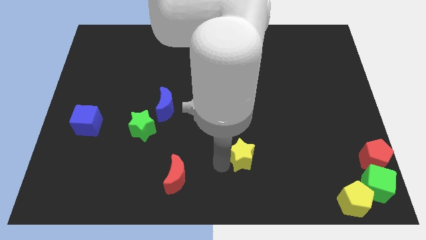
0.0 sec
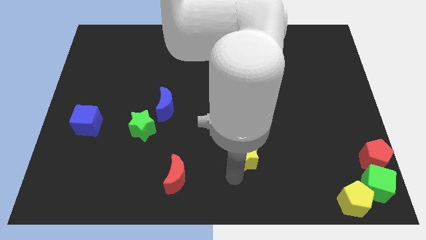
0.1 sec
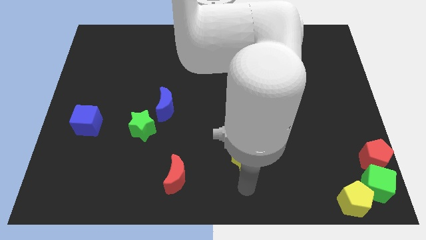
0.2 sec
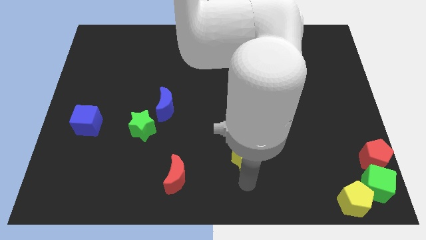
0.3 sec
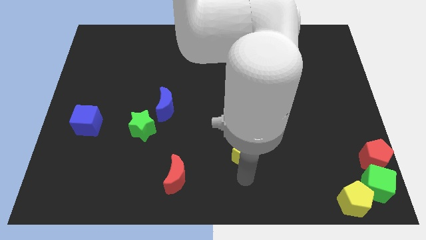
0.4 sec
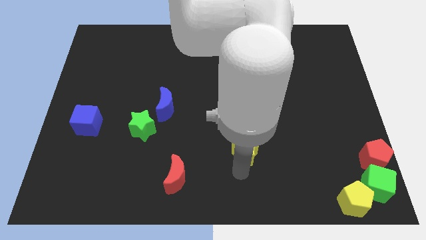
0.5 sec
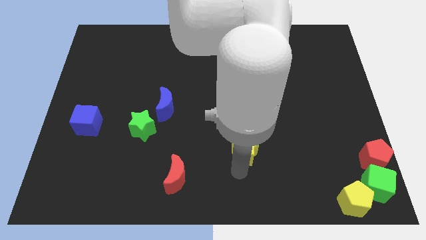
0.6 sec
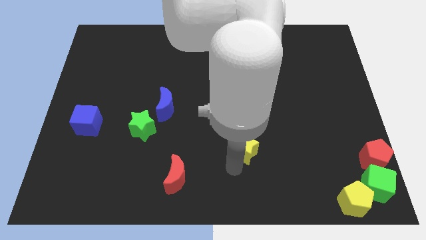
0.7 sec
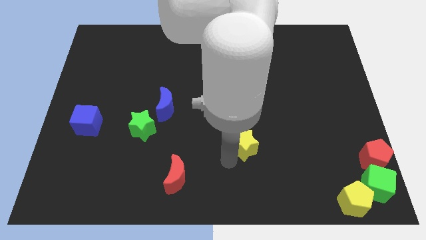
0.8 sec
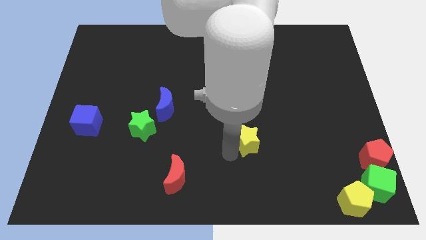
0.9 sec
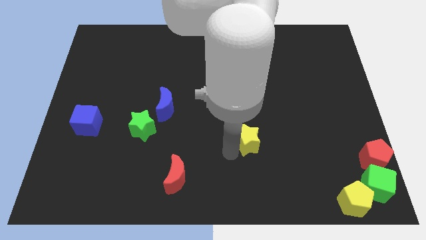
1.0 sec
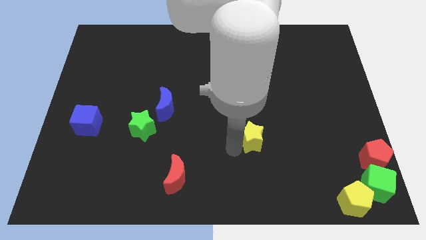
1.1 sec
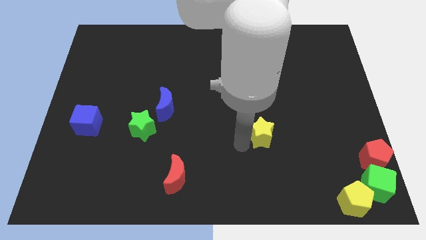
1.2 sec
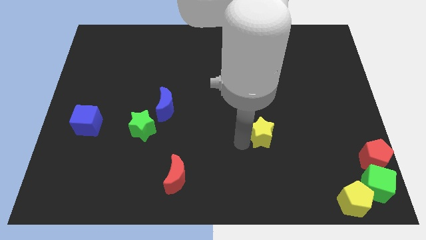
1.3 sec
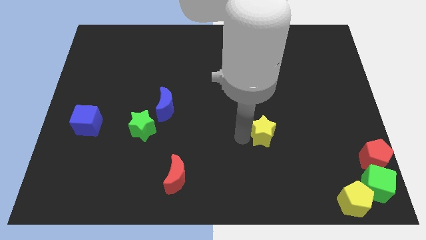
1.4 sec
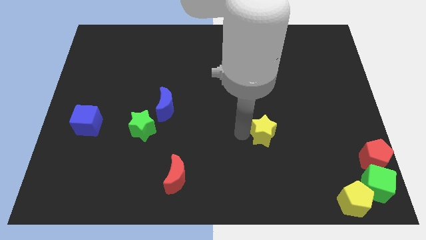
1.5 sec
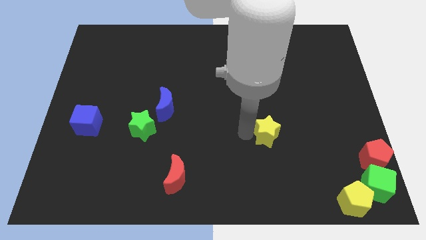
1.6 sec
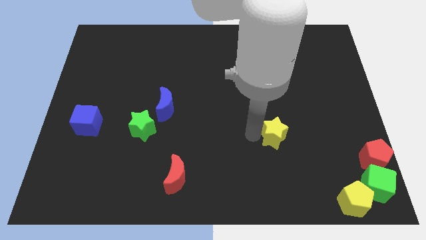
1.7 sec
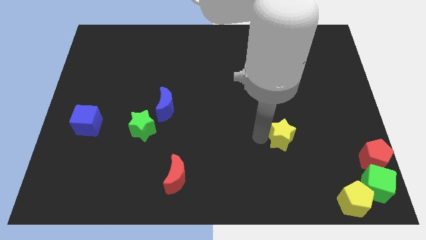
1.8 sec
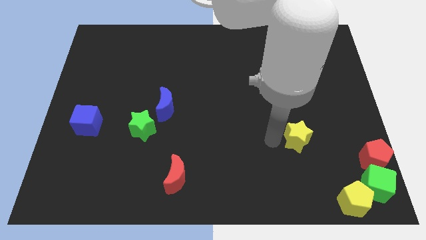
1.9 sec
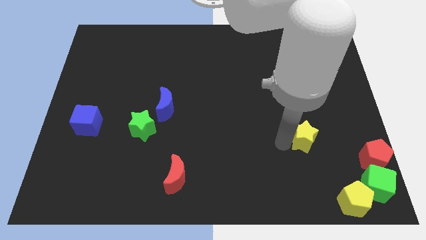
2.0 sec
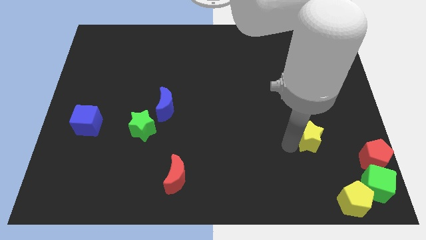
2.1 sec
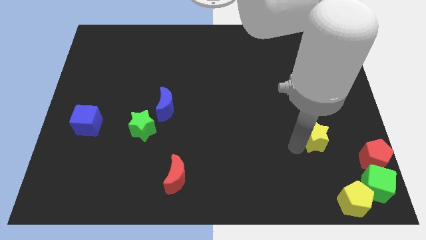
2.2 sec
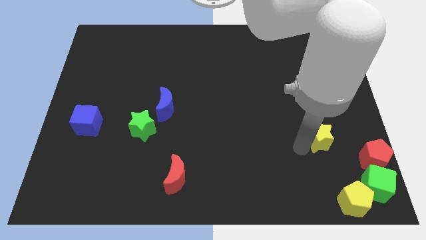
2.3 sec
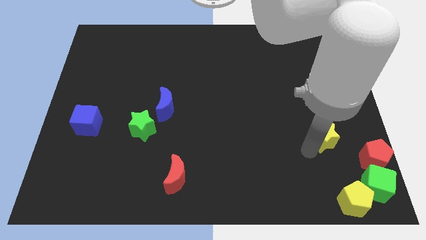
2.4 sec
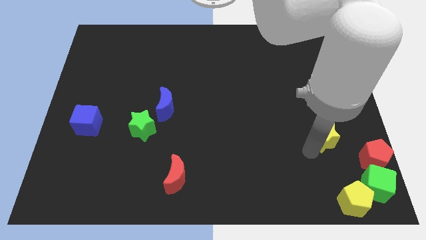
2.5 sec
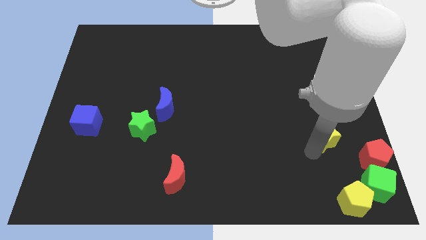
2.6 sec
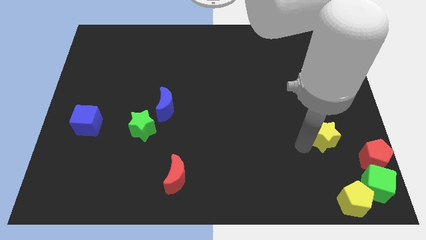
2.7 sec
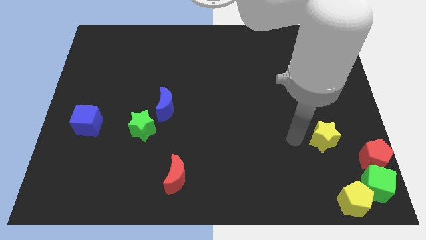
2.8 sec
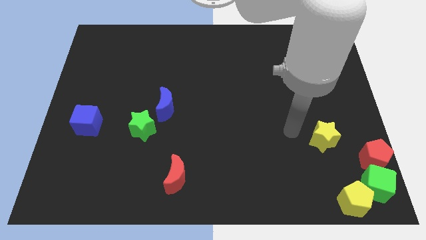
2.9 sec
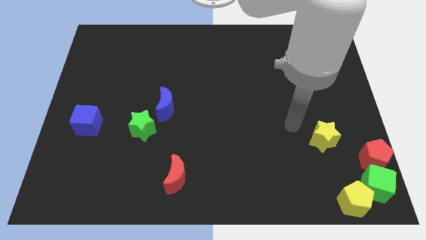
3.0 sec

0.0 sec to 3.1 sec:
move the yellow star diagonally above the red pentagon

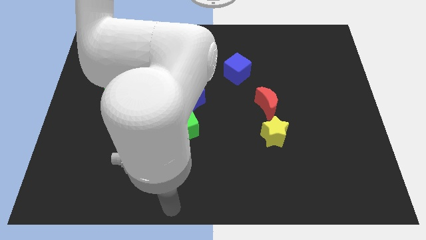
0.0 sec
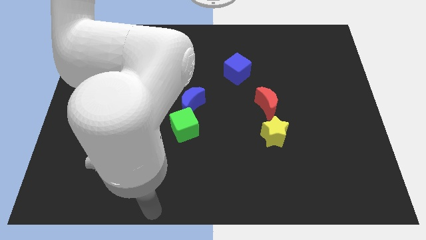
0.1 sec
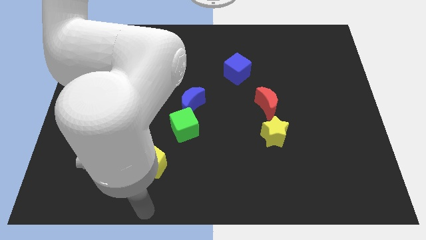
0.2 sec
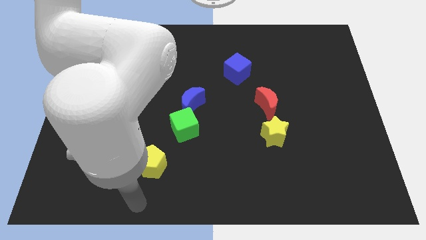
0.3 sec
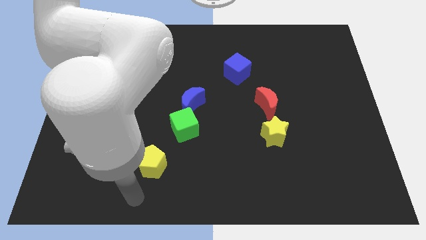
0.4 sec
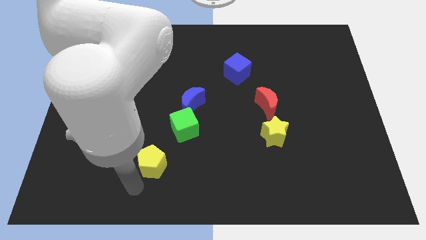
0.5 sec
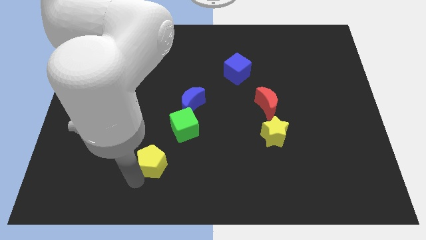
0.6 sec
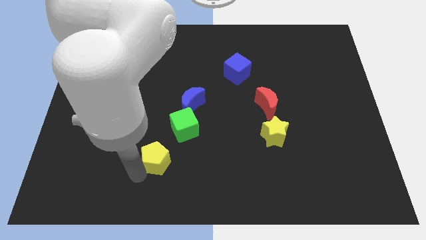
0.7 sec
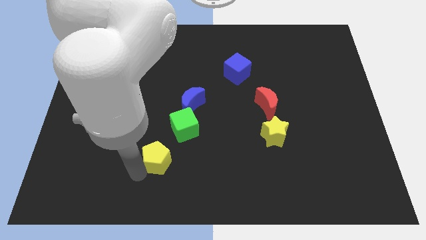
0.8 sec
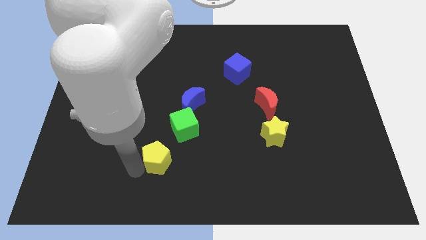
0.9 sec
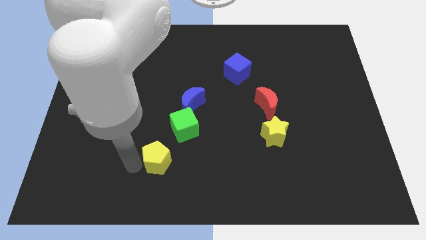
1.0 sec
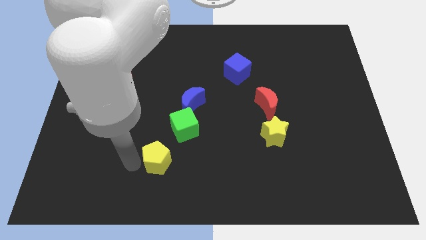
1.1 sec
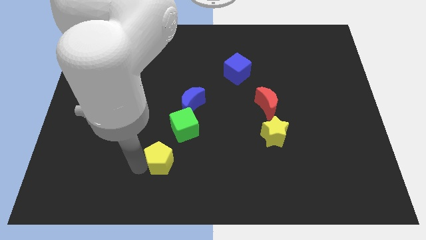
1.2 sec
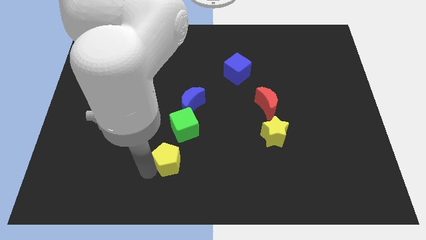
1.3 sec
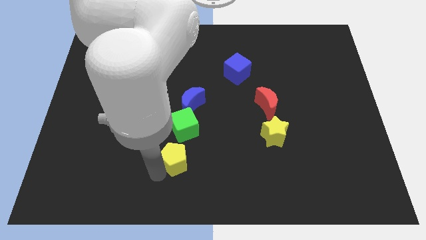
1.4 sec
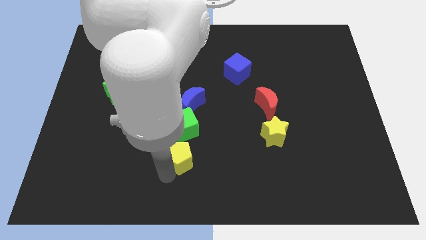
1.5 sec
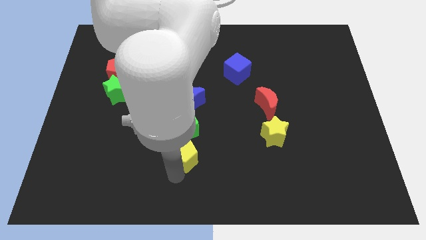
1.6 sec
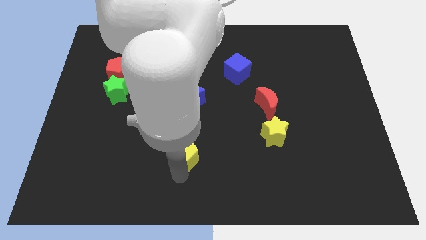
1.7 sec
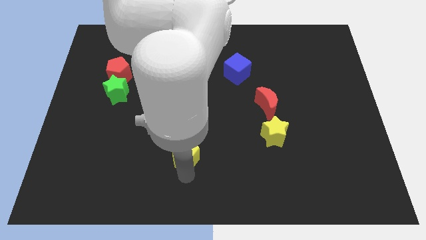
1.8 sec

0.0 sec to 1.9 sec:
move the yellow pentagon below the green cube

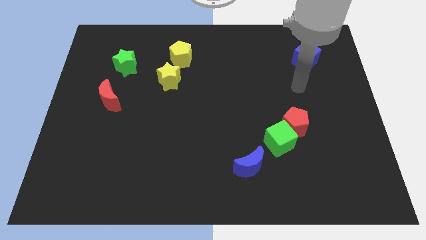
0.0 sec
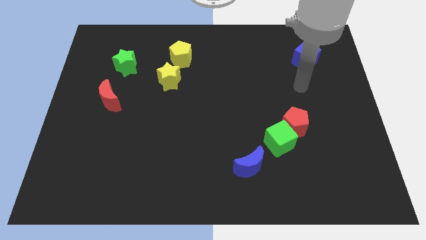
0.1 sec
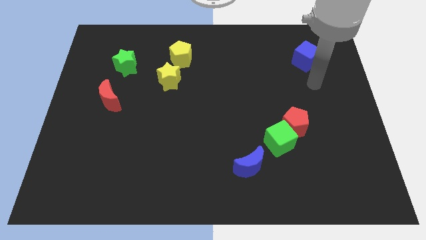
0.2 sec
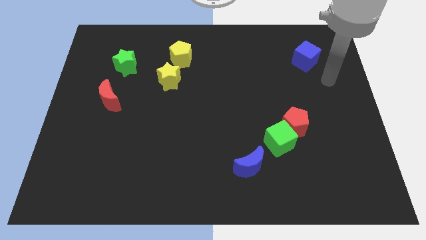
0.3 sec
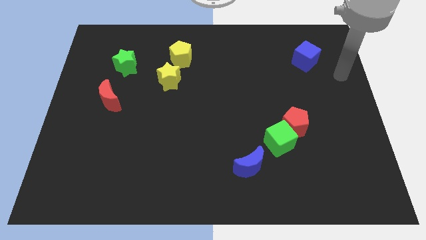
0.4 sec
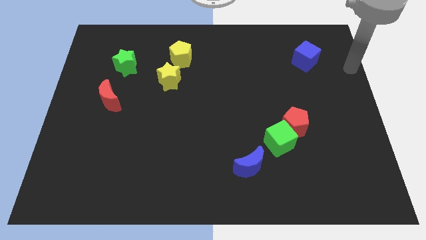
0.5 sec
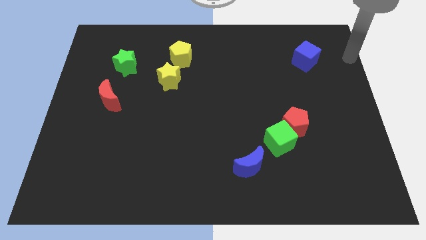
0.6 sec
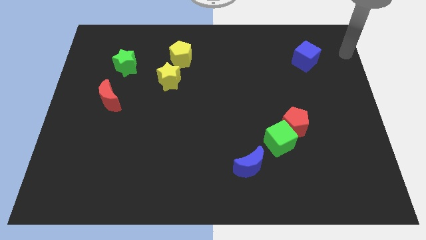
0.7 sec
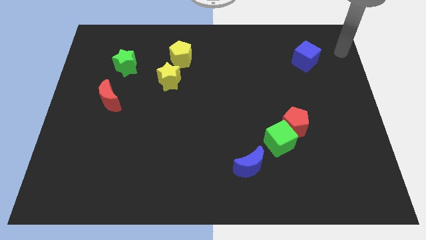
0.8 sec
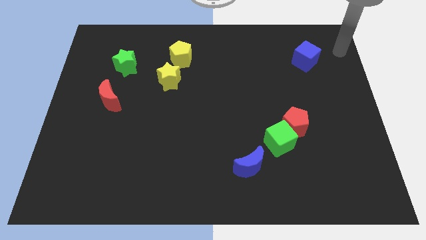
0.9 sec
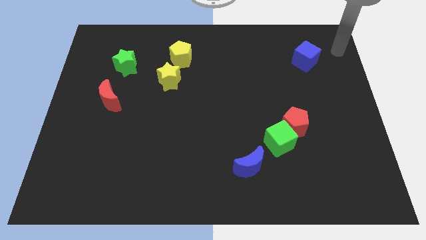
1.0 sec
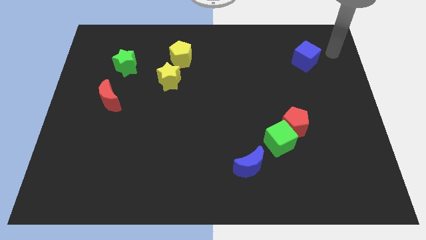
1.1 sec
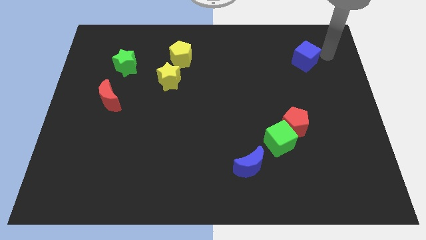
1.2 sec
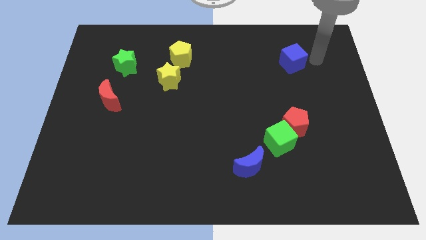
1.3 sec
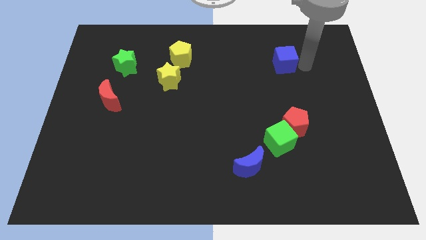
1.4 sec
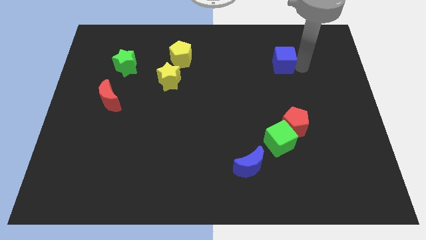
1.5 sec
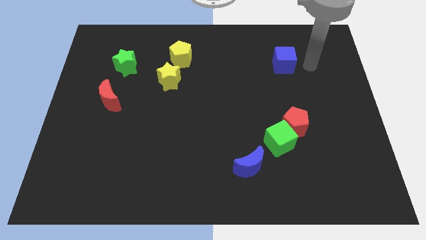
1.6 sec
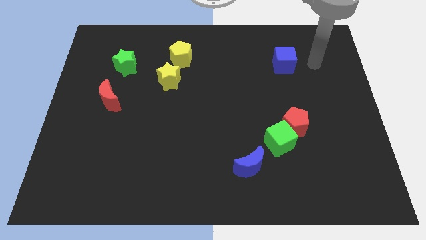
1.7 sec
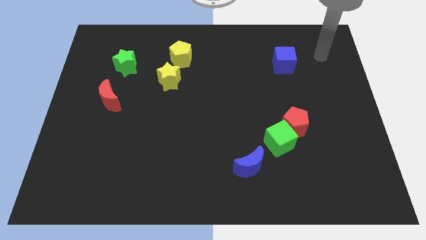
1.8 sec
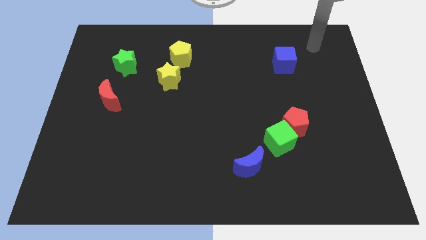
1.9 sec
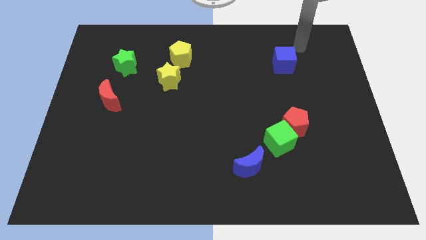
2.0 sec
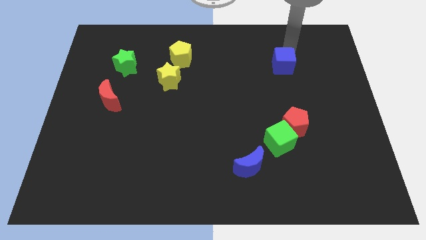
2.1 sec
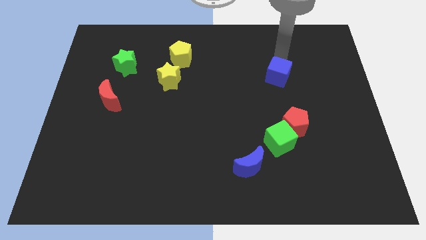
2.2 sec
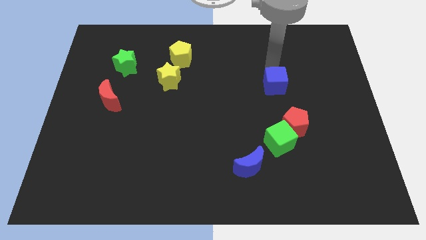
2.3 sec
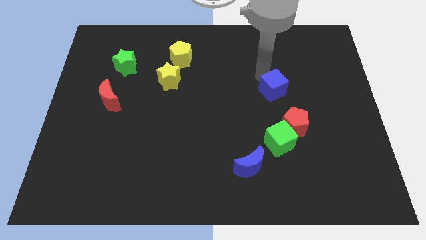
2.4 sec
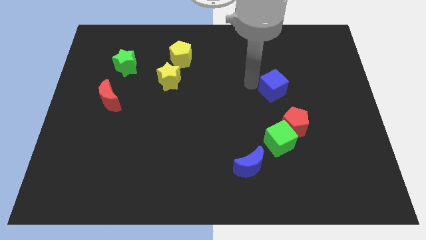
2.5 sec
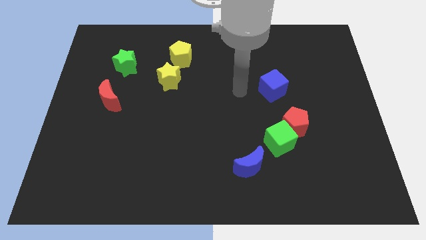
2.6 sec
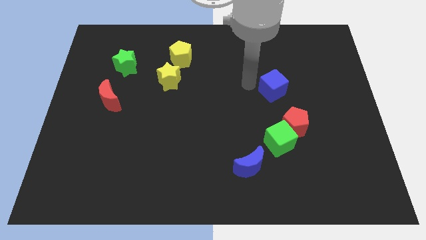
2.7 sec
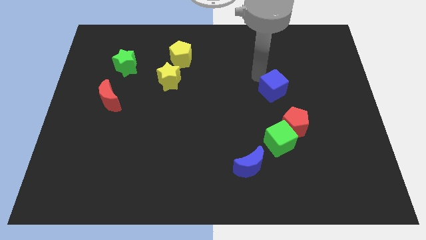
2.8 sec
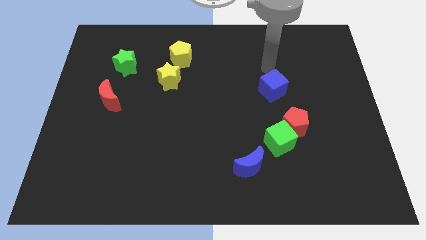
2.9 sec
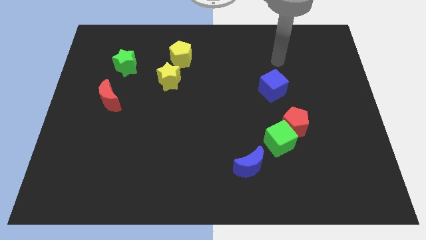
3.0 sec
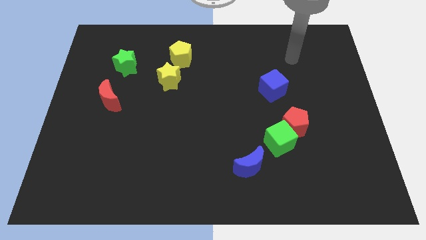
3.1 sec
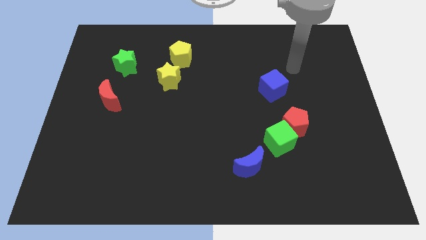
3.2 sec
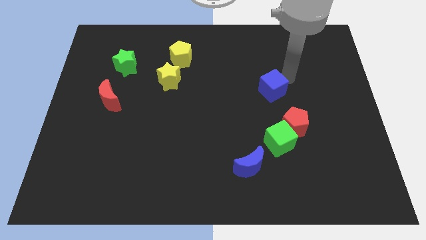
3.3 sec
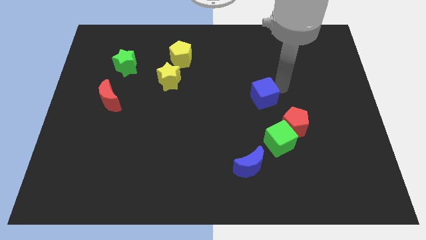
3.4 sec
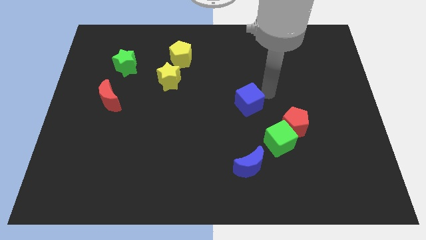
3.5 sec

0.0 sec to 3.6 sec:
place the blue cube diagonally top left to the green cube

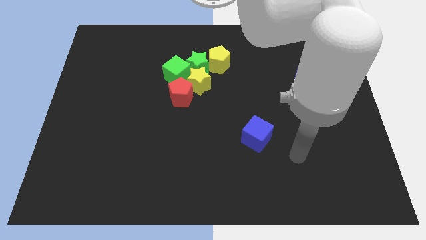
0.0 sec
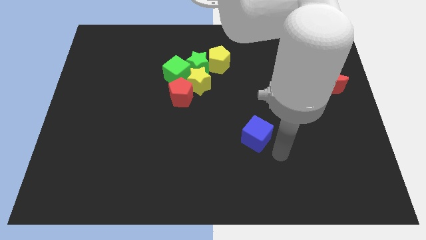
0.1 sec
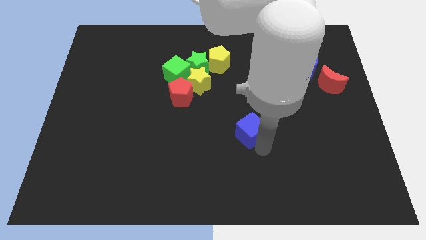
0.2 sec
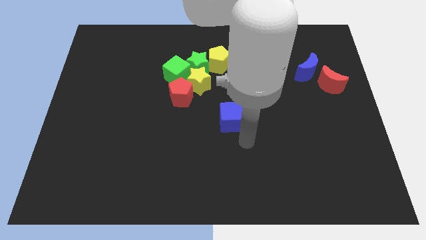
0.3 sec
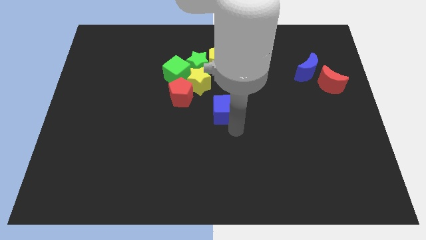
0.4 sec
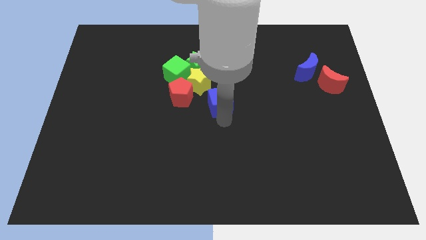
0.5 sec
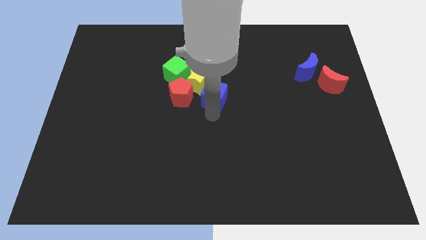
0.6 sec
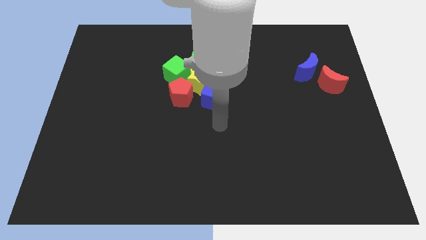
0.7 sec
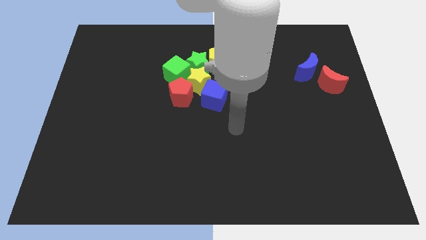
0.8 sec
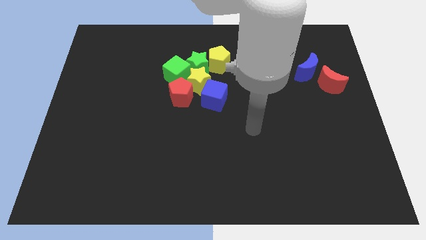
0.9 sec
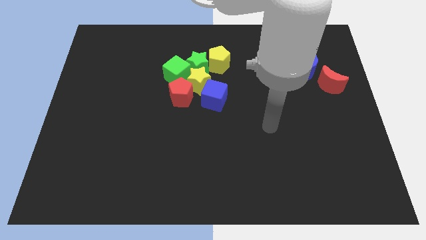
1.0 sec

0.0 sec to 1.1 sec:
push blue cube towards bottom right to the yellow star
